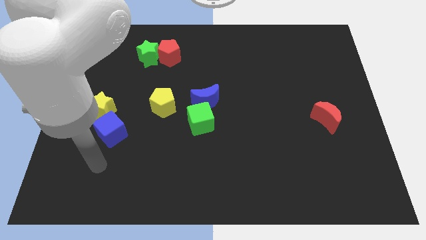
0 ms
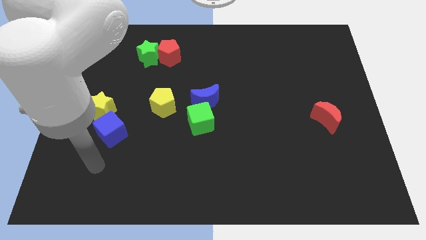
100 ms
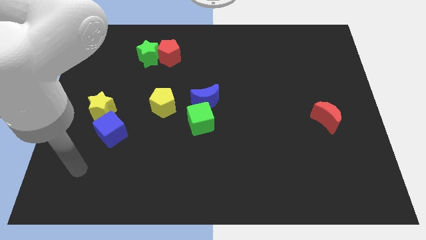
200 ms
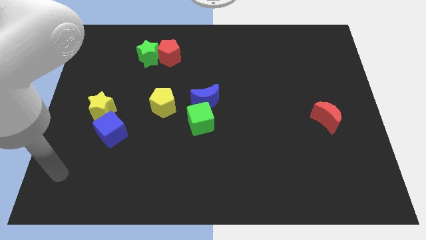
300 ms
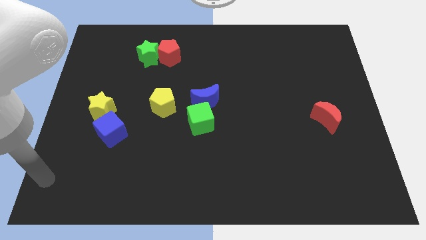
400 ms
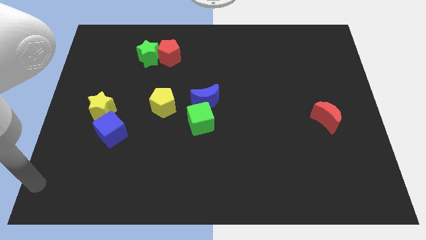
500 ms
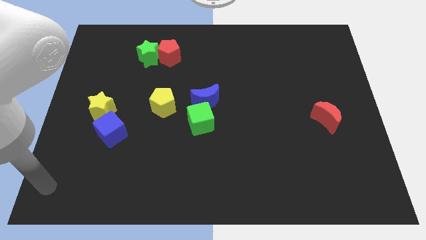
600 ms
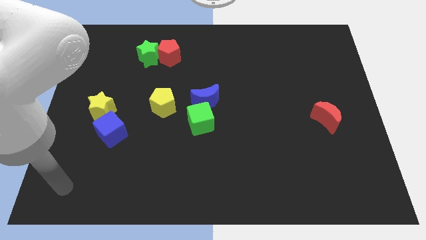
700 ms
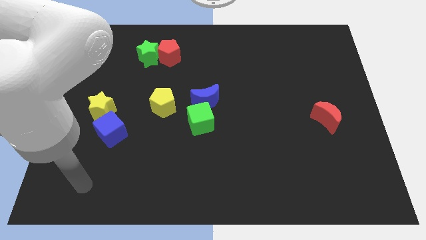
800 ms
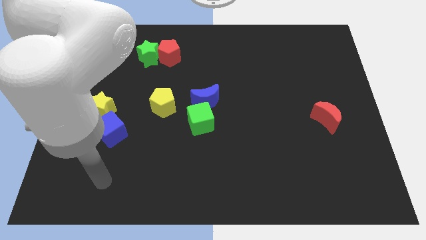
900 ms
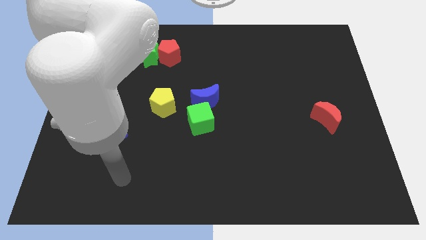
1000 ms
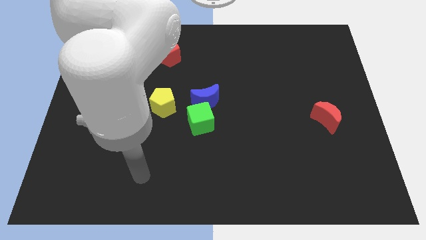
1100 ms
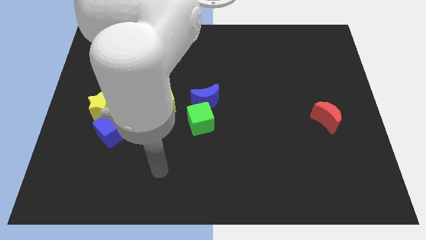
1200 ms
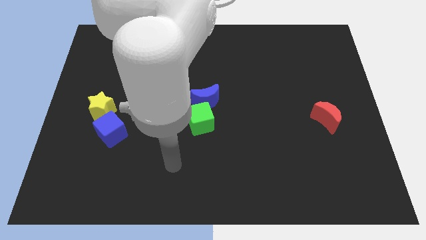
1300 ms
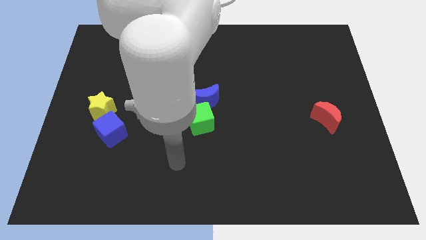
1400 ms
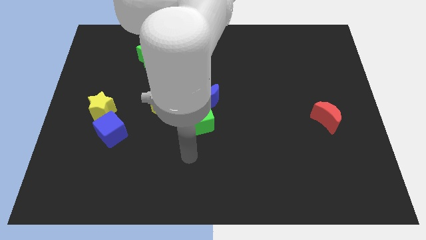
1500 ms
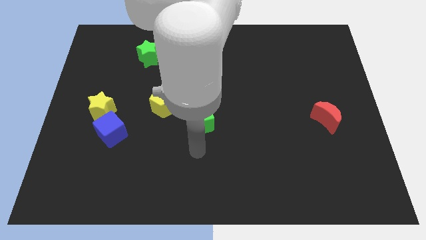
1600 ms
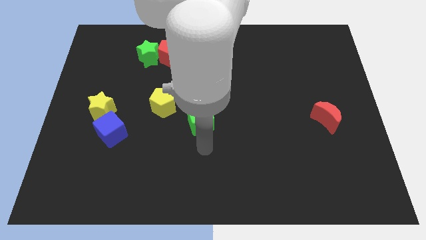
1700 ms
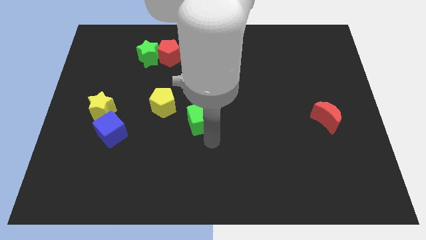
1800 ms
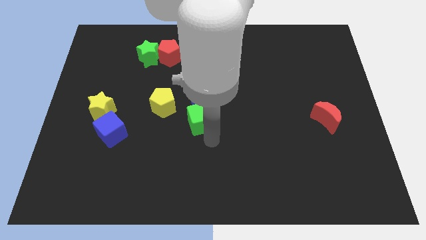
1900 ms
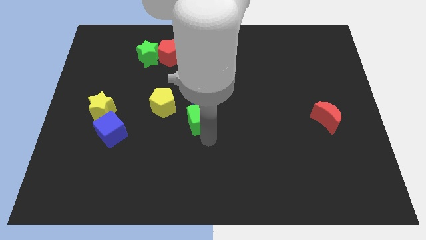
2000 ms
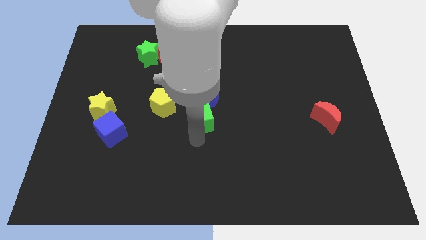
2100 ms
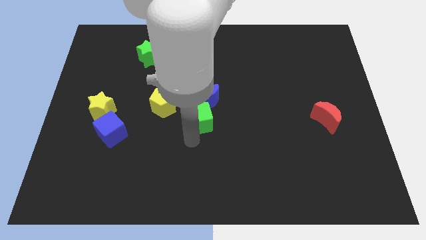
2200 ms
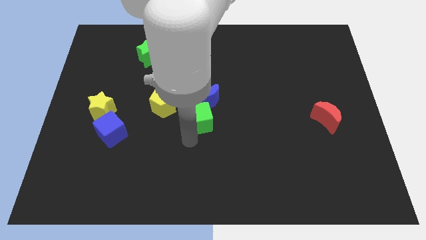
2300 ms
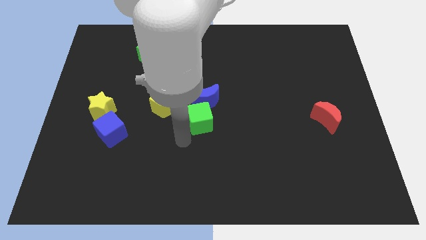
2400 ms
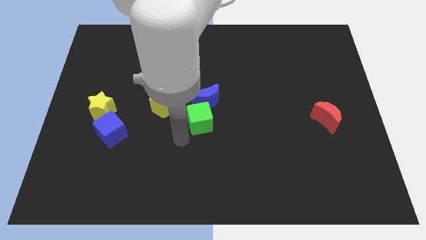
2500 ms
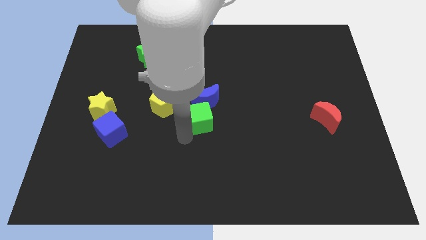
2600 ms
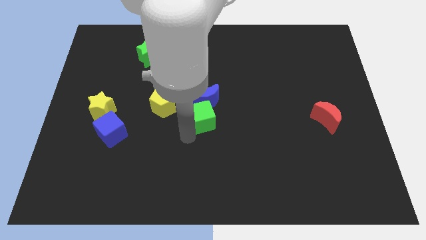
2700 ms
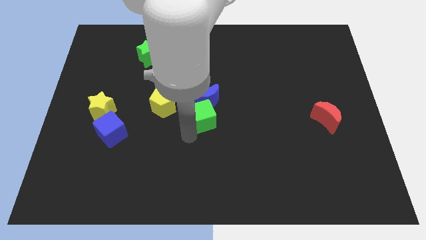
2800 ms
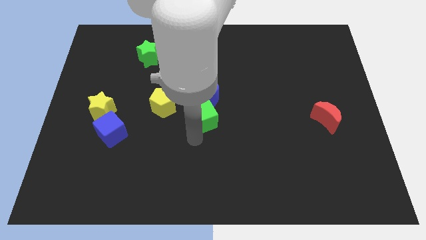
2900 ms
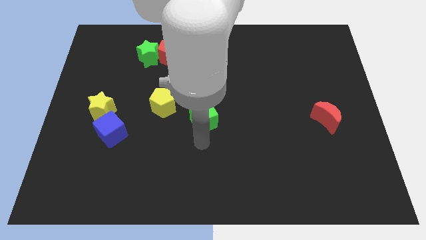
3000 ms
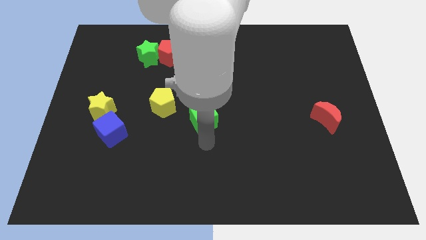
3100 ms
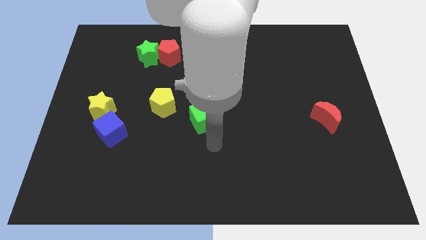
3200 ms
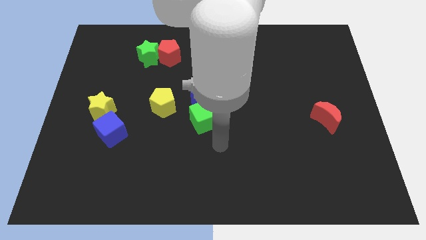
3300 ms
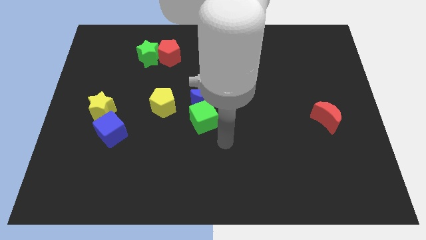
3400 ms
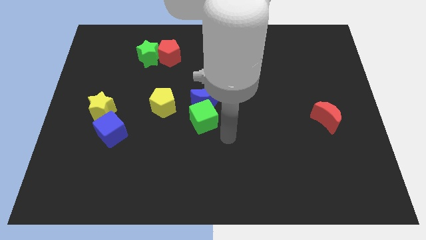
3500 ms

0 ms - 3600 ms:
move green cube into blue moon

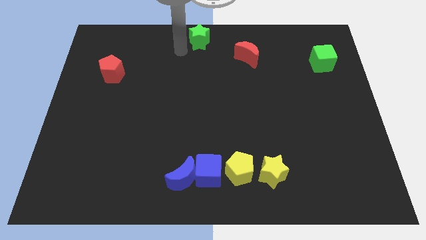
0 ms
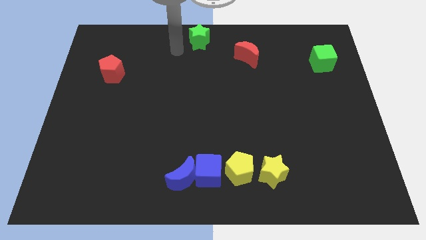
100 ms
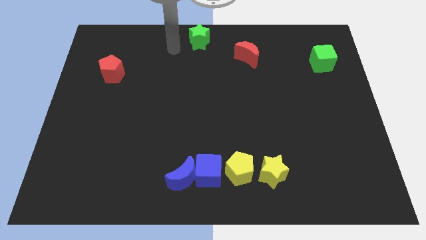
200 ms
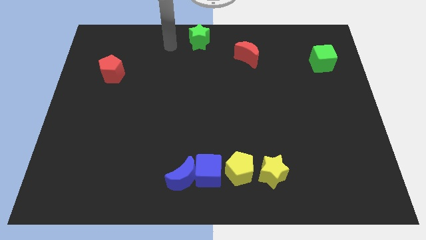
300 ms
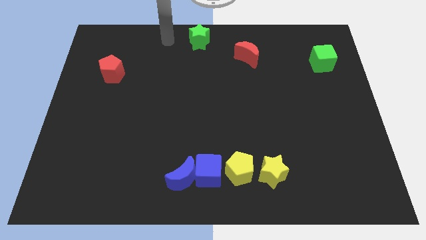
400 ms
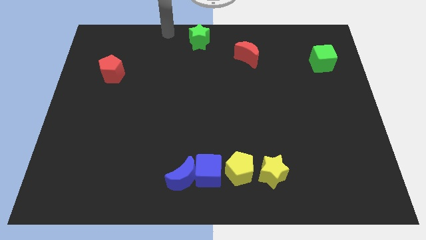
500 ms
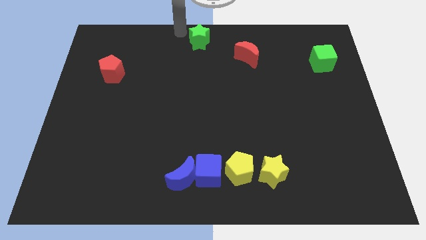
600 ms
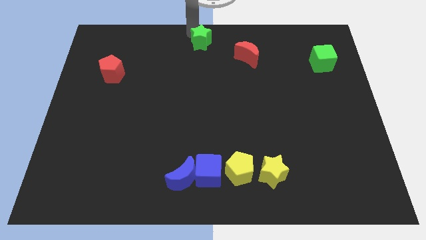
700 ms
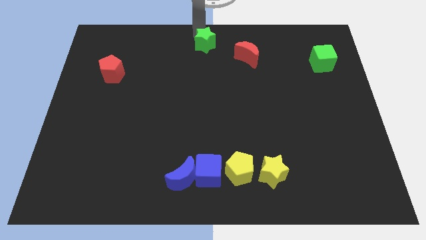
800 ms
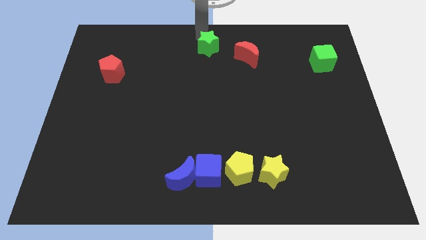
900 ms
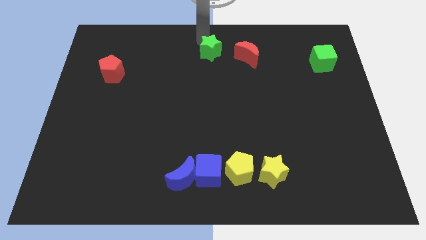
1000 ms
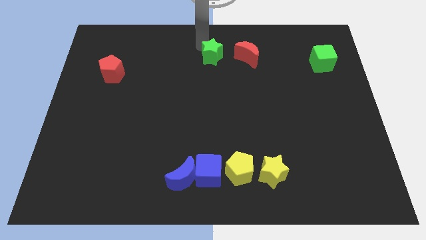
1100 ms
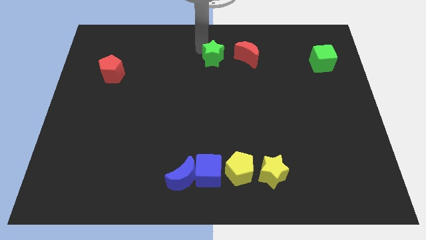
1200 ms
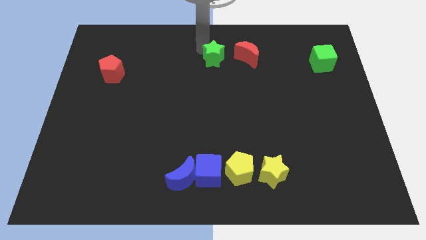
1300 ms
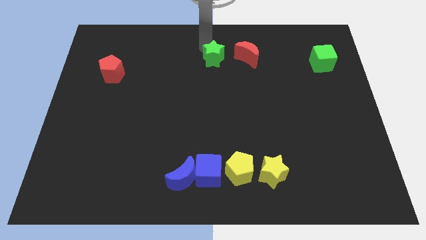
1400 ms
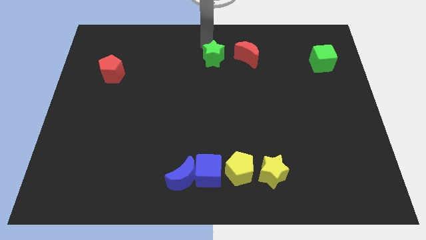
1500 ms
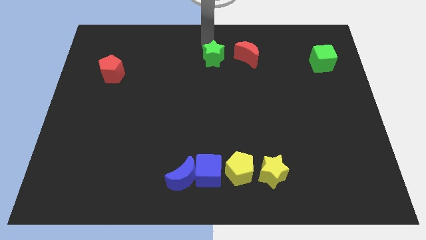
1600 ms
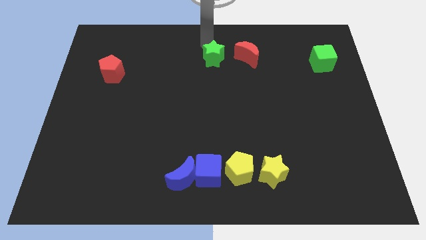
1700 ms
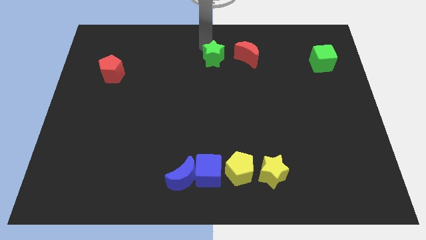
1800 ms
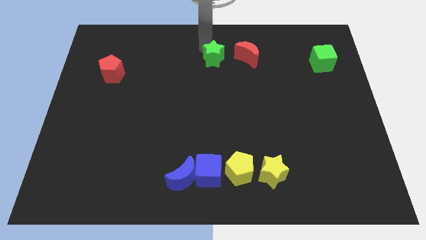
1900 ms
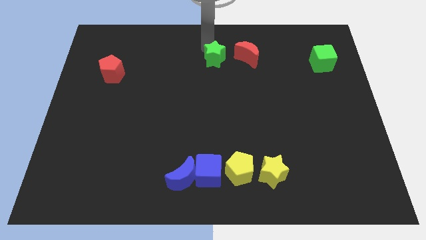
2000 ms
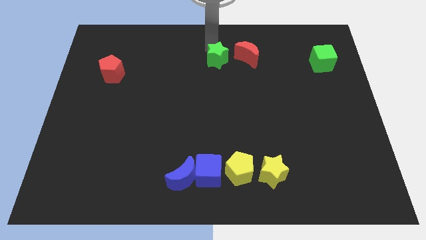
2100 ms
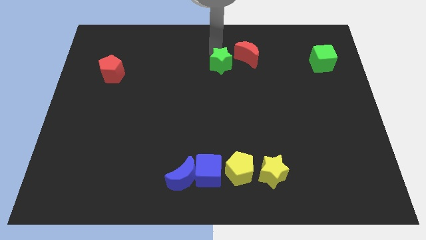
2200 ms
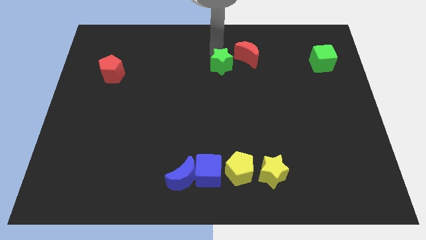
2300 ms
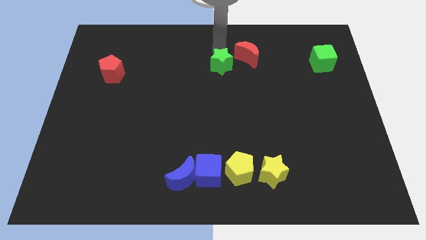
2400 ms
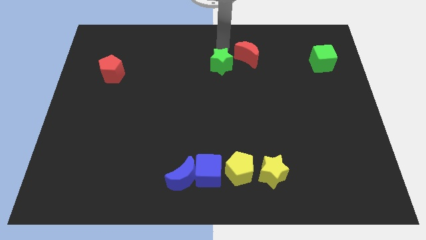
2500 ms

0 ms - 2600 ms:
place the green star left to the red crescent

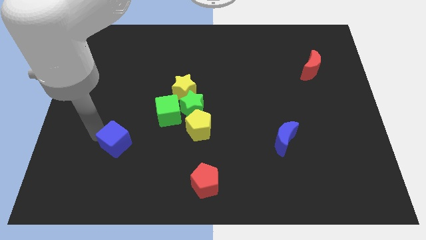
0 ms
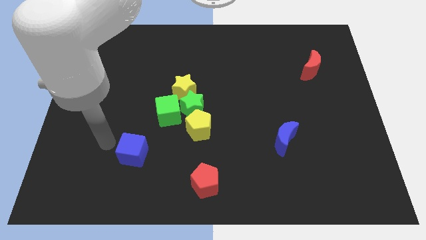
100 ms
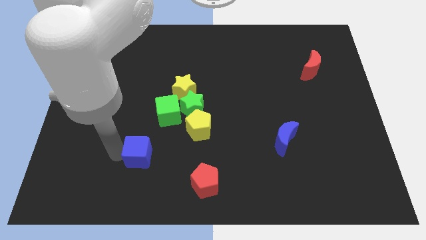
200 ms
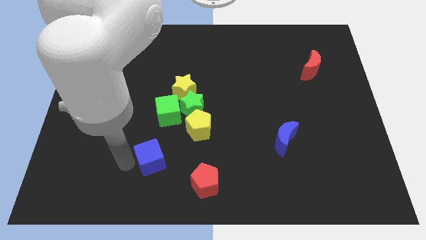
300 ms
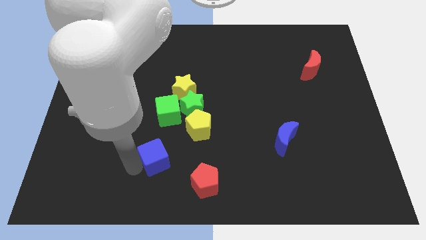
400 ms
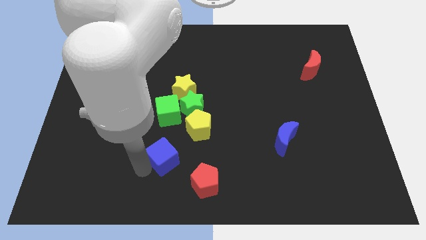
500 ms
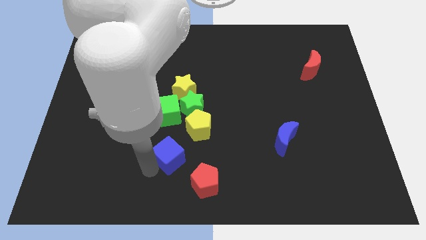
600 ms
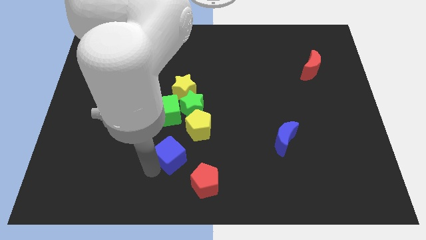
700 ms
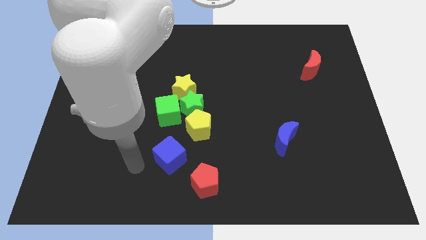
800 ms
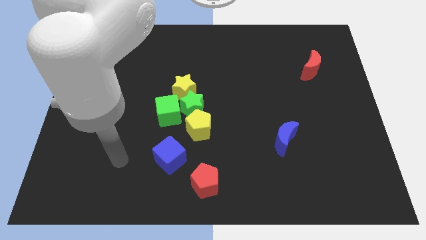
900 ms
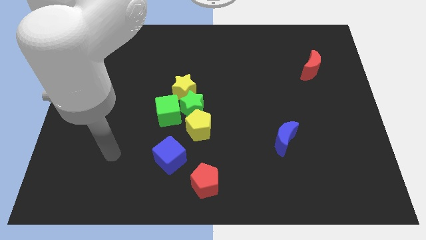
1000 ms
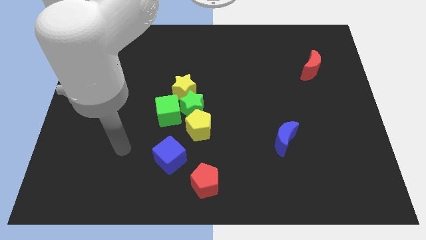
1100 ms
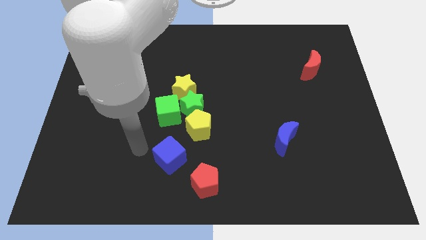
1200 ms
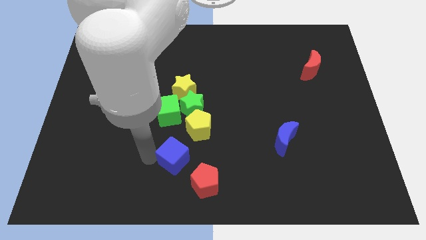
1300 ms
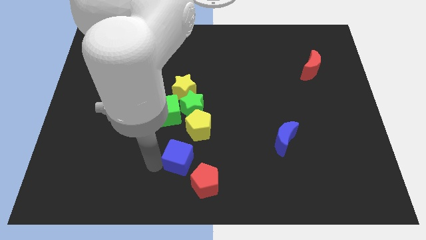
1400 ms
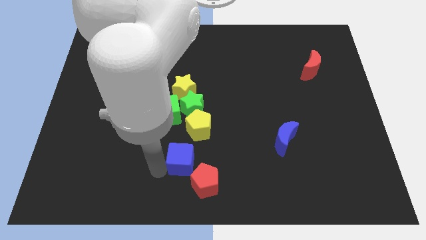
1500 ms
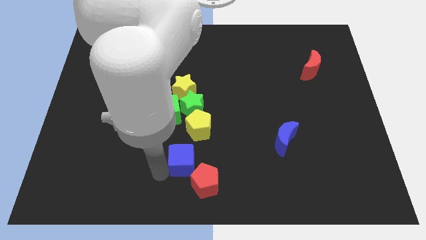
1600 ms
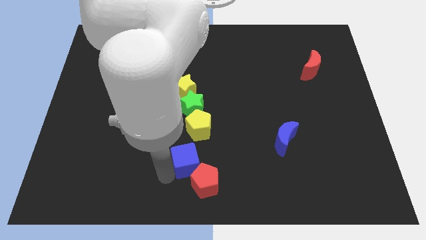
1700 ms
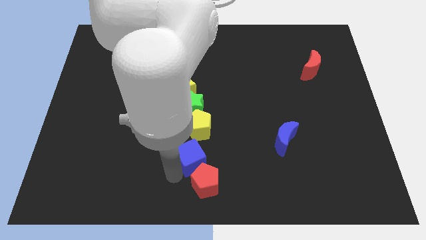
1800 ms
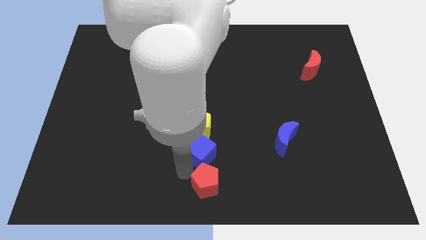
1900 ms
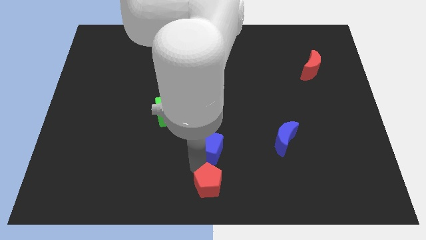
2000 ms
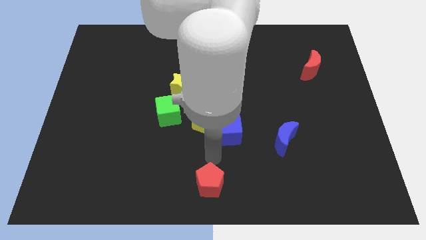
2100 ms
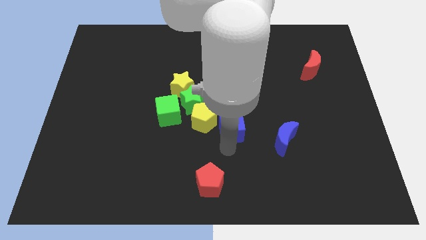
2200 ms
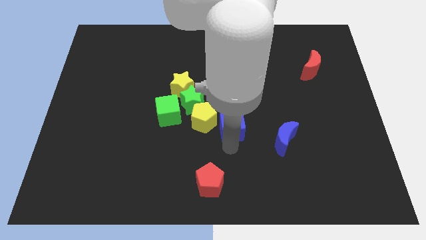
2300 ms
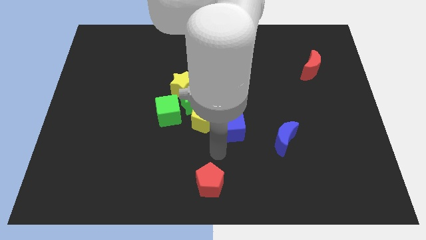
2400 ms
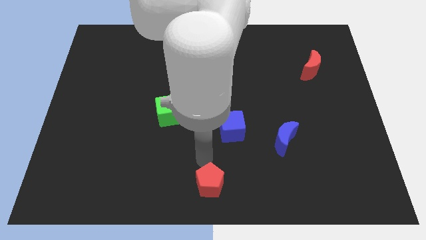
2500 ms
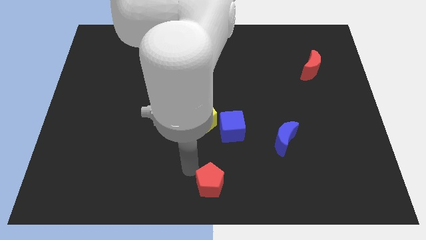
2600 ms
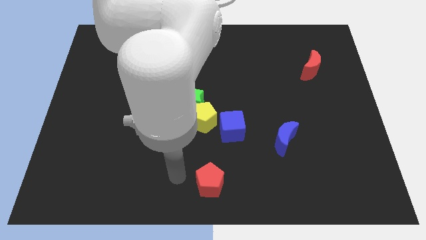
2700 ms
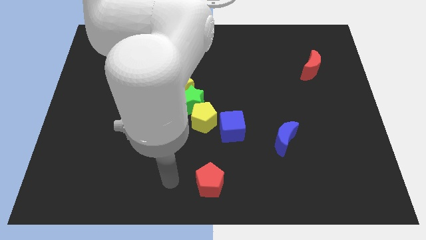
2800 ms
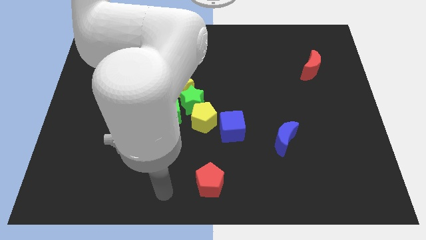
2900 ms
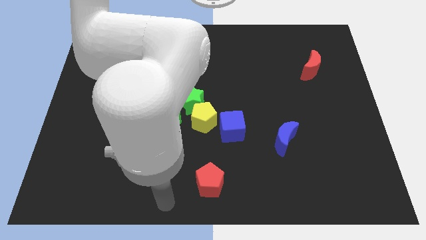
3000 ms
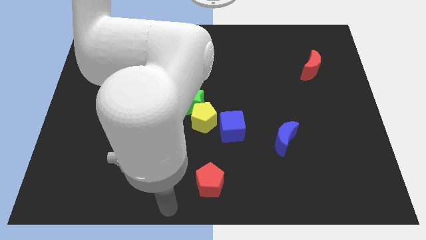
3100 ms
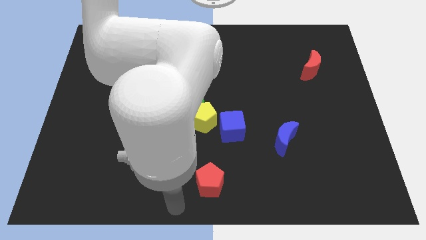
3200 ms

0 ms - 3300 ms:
drag the blue cube to the bottom right side of the yellow pentagon
